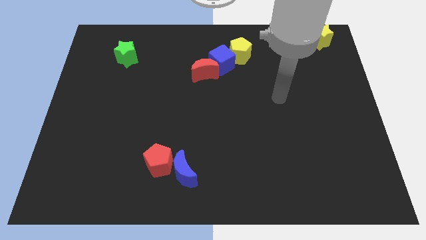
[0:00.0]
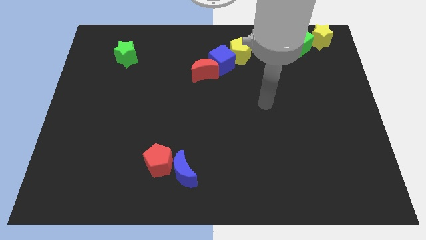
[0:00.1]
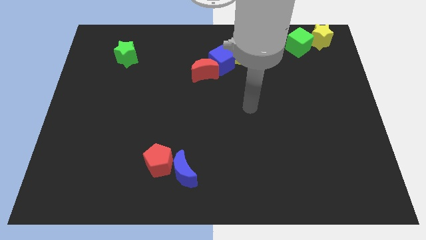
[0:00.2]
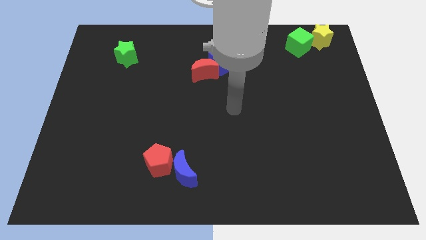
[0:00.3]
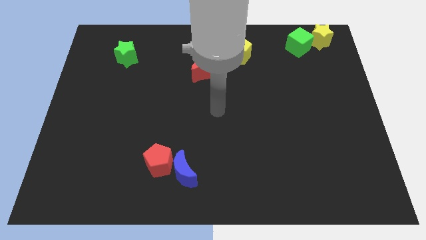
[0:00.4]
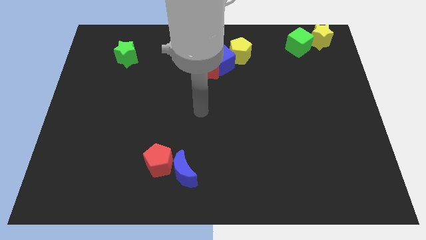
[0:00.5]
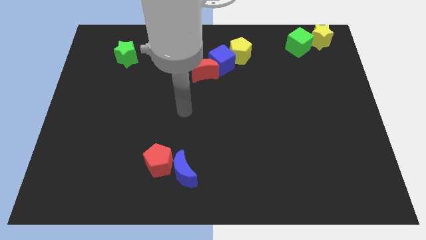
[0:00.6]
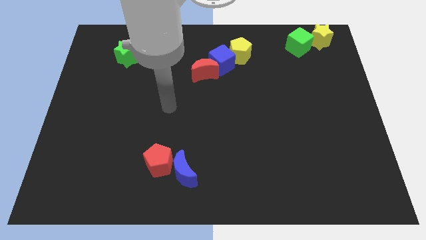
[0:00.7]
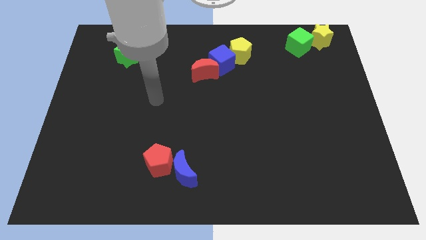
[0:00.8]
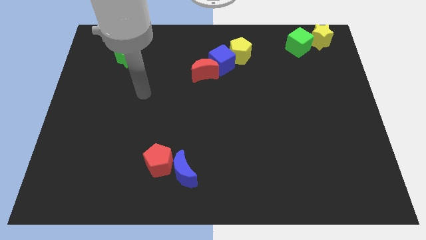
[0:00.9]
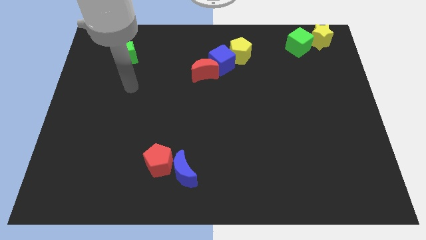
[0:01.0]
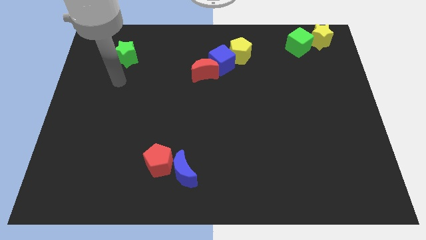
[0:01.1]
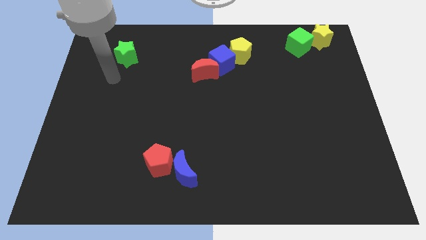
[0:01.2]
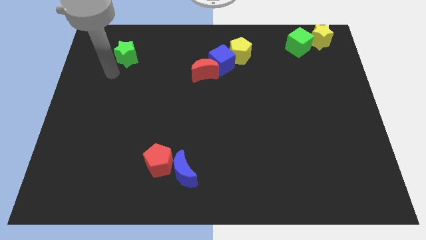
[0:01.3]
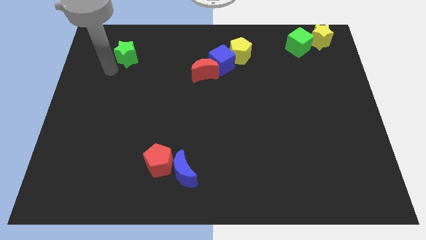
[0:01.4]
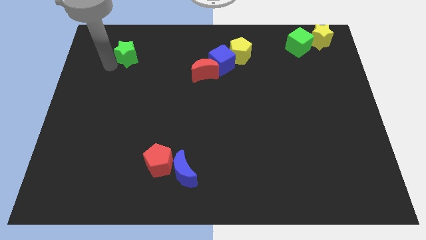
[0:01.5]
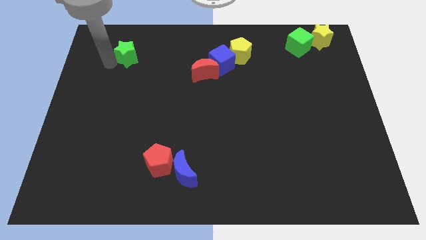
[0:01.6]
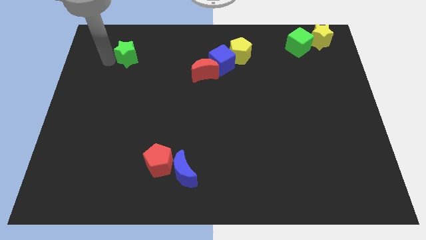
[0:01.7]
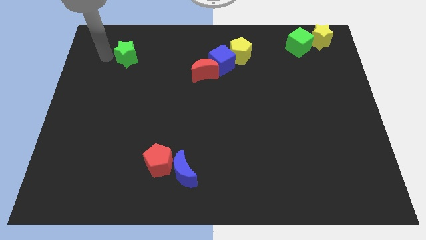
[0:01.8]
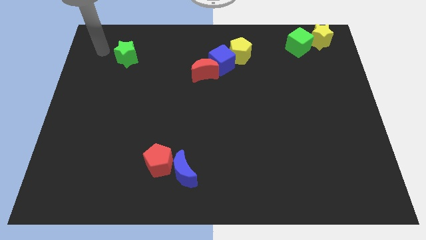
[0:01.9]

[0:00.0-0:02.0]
move your arm and point towards the left of green star

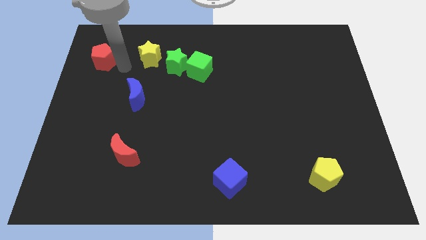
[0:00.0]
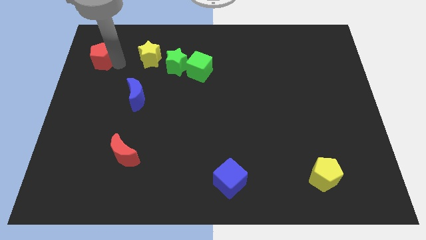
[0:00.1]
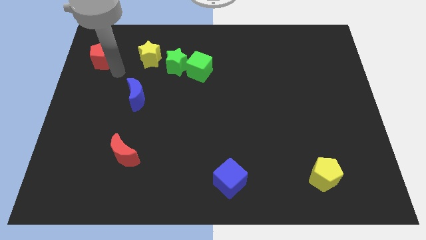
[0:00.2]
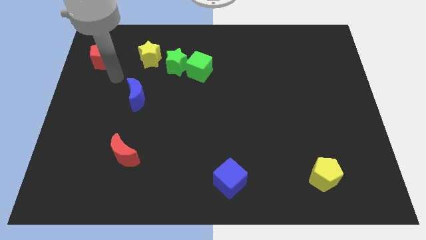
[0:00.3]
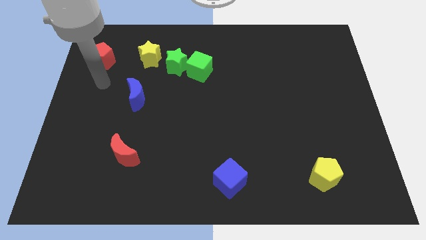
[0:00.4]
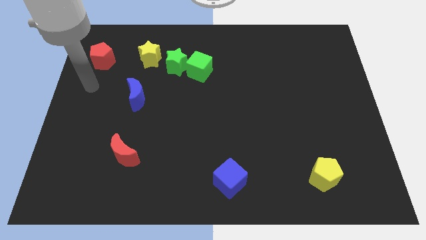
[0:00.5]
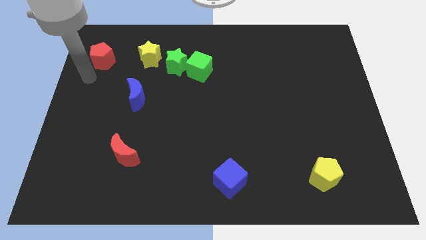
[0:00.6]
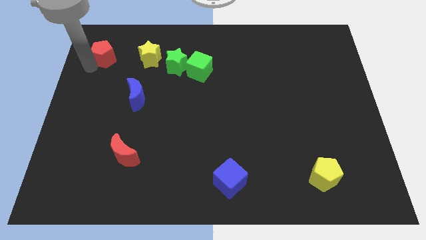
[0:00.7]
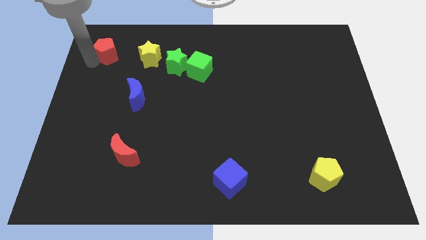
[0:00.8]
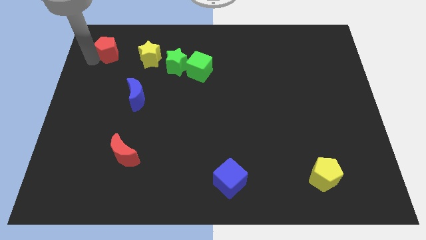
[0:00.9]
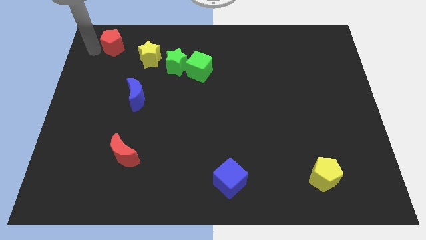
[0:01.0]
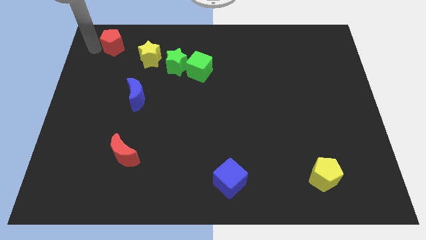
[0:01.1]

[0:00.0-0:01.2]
place the red pentagon towards the top left side of the yellow star

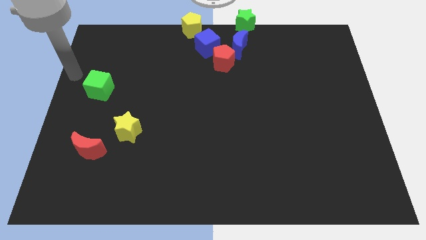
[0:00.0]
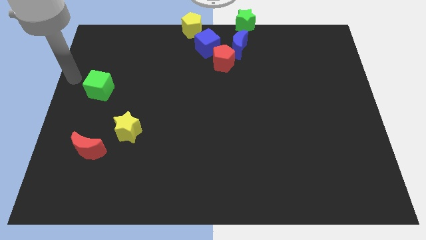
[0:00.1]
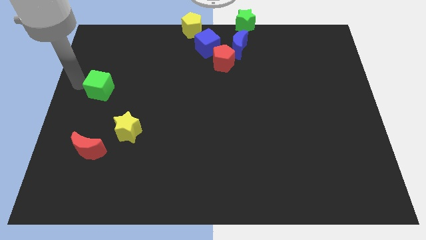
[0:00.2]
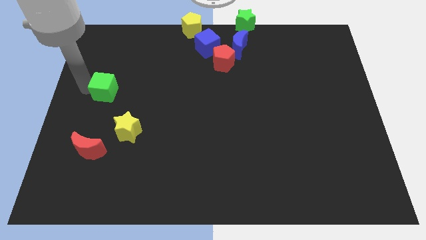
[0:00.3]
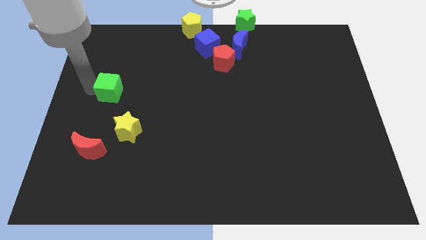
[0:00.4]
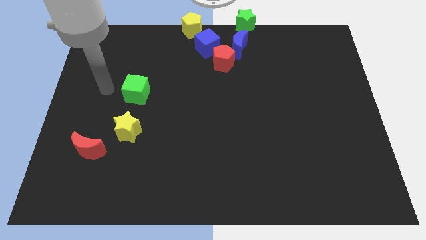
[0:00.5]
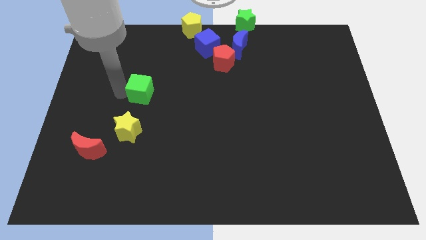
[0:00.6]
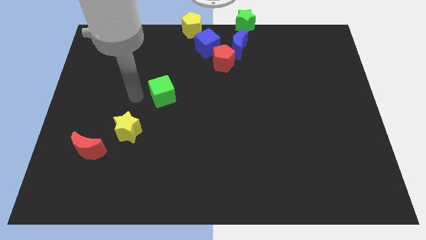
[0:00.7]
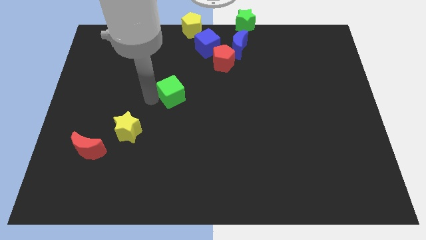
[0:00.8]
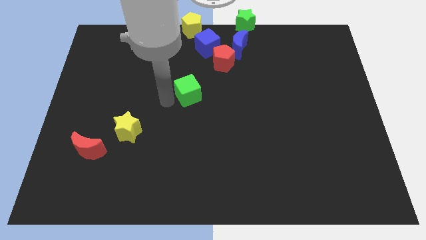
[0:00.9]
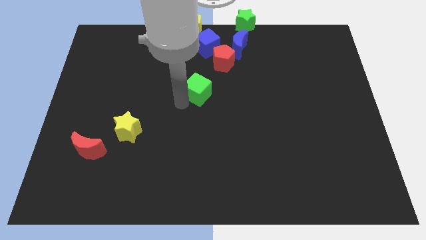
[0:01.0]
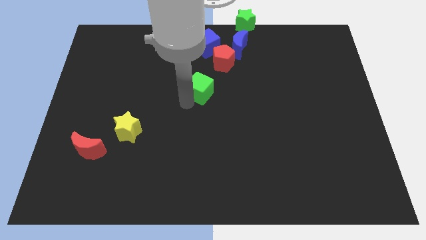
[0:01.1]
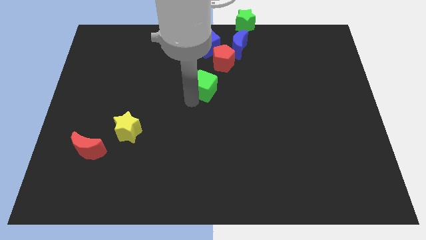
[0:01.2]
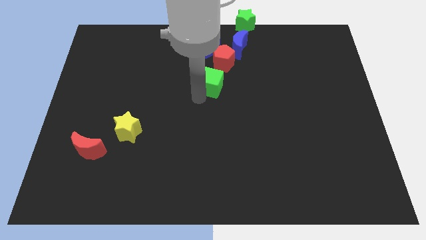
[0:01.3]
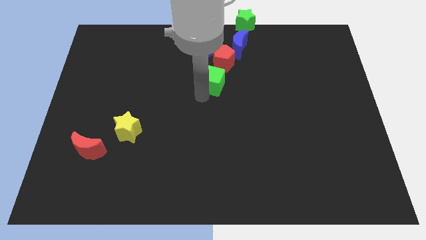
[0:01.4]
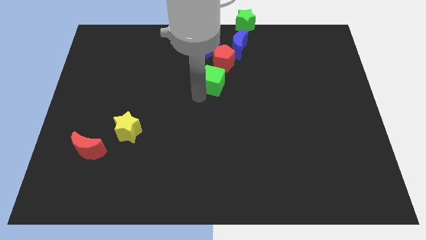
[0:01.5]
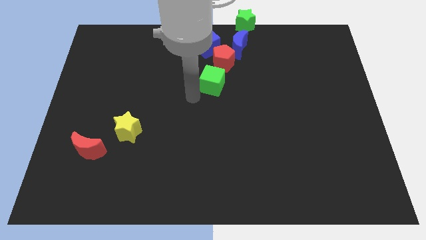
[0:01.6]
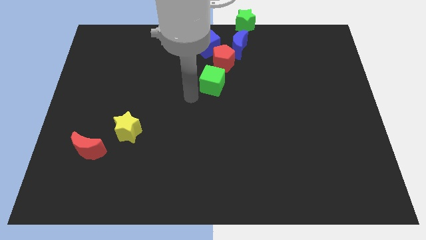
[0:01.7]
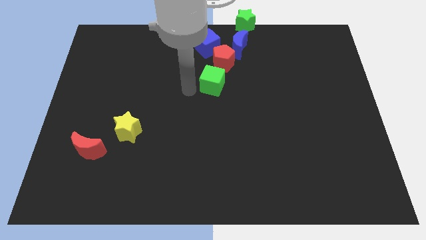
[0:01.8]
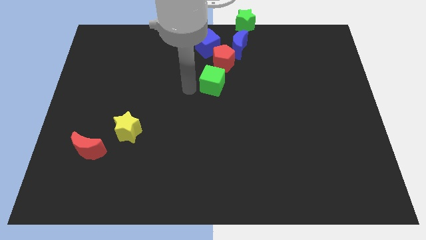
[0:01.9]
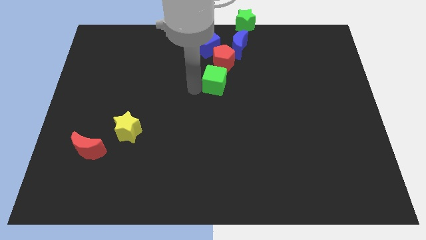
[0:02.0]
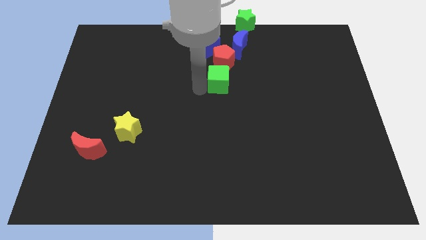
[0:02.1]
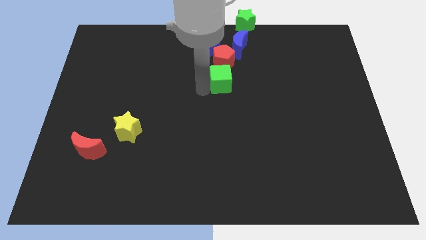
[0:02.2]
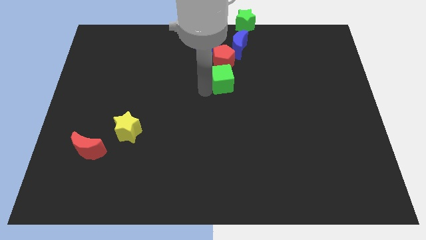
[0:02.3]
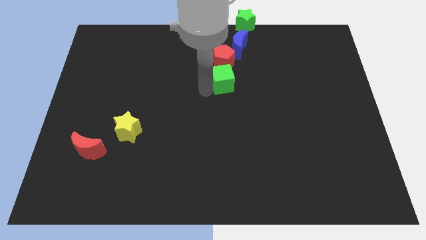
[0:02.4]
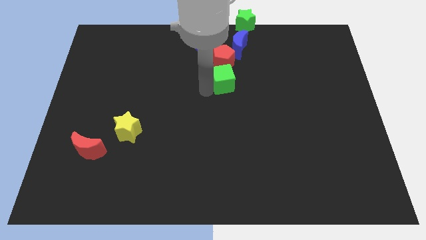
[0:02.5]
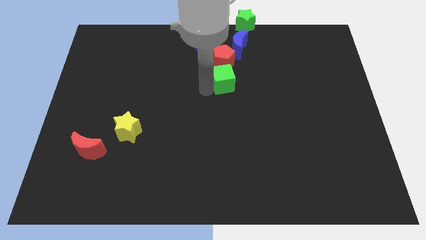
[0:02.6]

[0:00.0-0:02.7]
move the green cube to the bottom of red pentagon

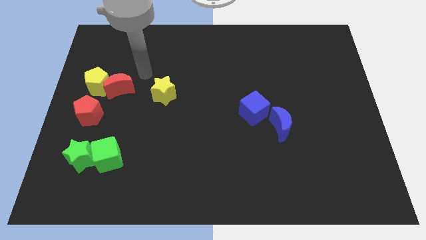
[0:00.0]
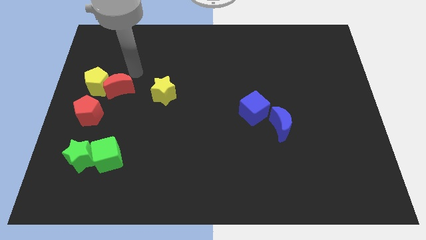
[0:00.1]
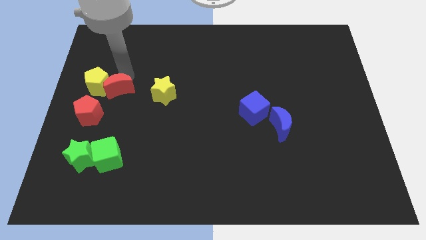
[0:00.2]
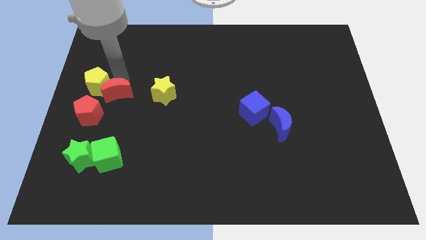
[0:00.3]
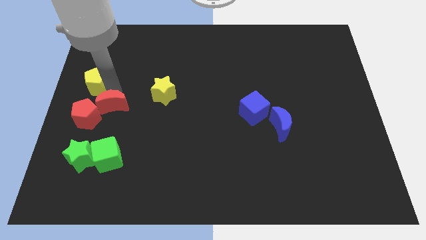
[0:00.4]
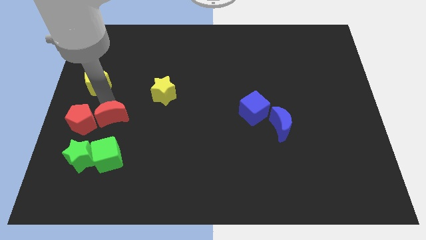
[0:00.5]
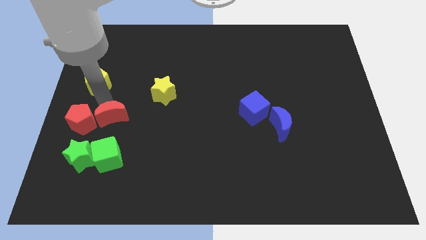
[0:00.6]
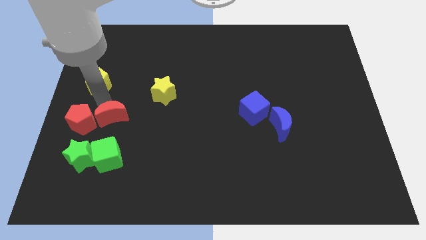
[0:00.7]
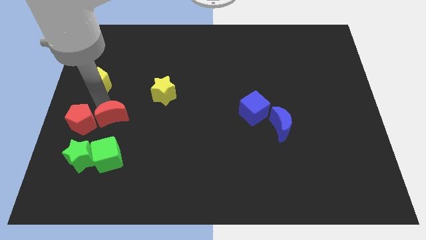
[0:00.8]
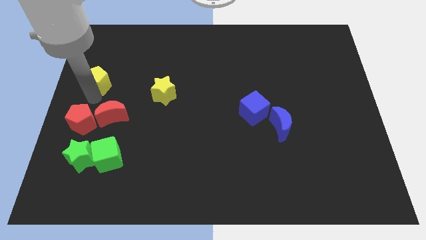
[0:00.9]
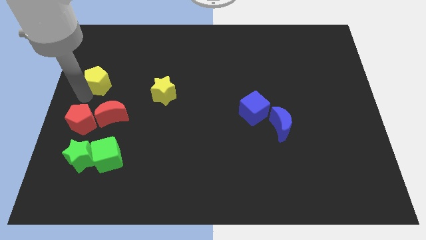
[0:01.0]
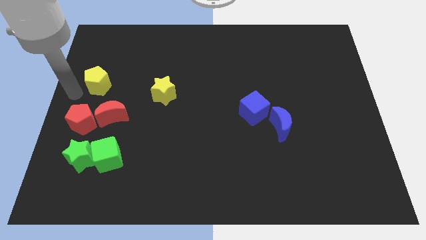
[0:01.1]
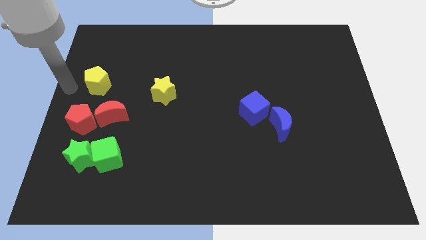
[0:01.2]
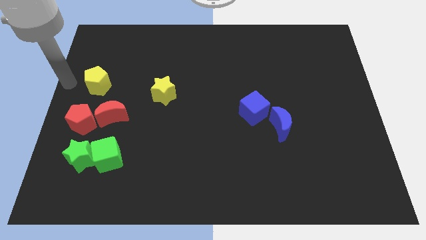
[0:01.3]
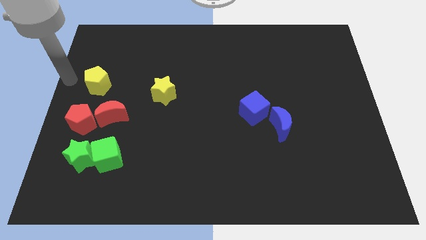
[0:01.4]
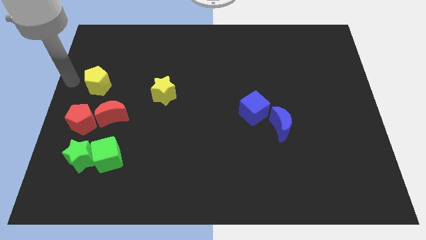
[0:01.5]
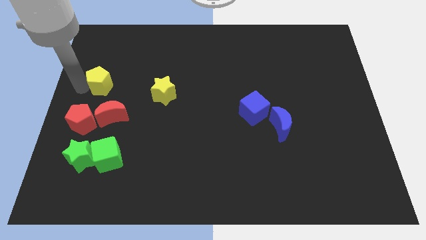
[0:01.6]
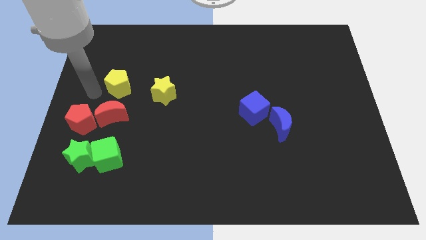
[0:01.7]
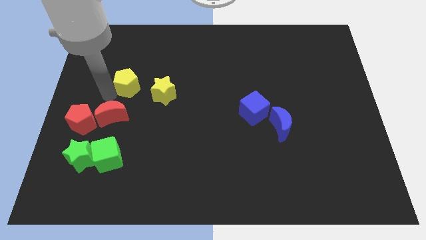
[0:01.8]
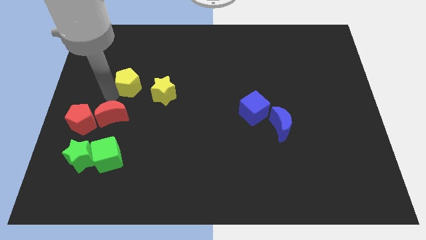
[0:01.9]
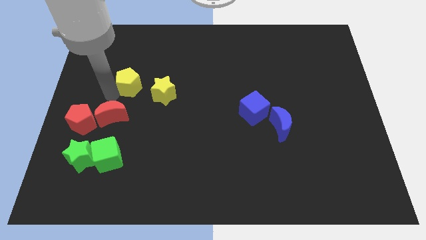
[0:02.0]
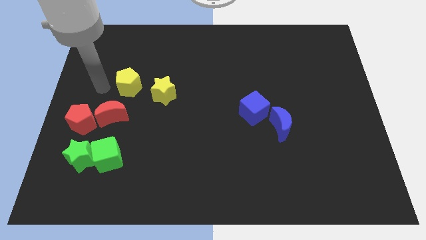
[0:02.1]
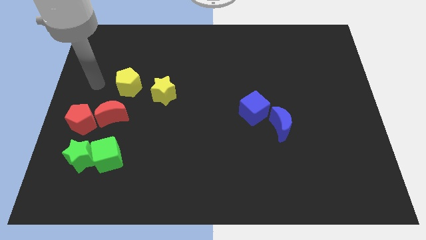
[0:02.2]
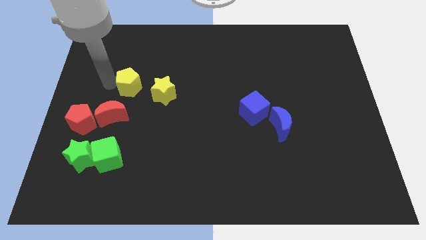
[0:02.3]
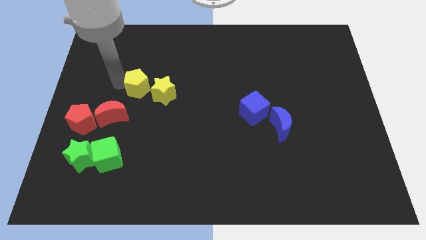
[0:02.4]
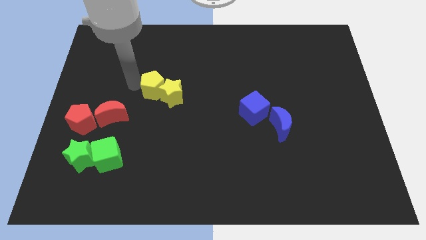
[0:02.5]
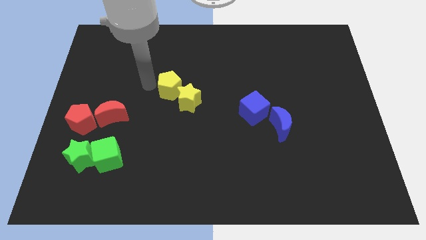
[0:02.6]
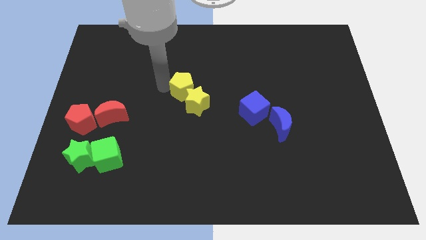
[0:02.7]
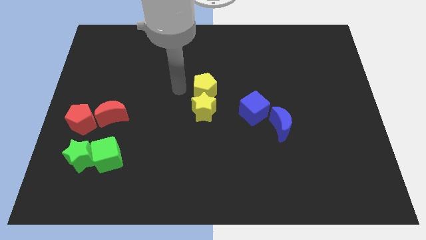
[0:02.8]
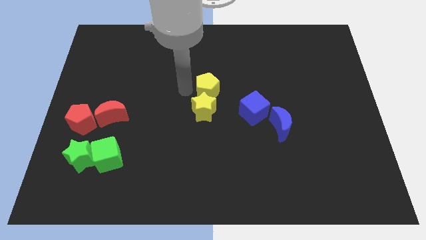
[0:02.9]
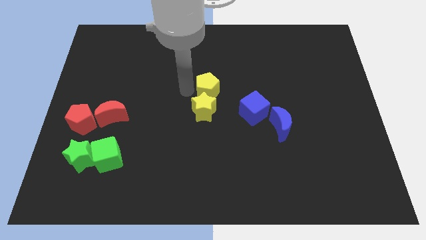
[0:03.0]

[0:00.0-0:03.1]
push yellow pentagon above yellow star
